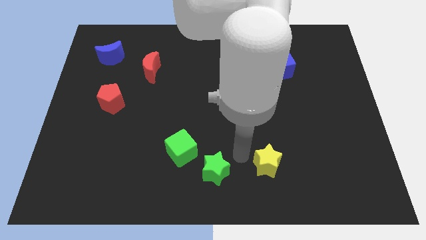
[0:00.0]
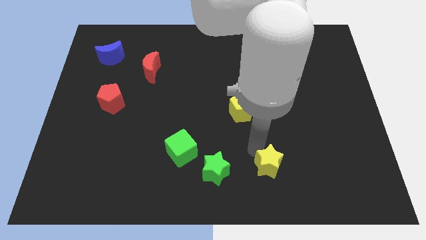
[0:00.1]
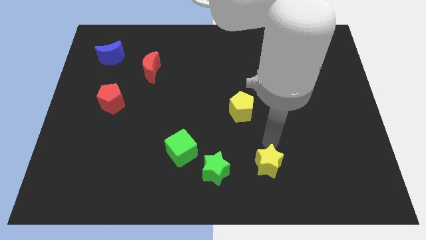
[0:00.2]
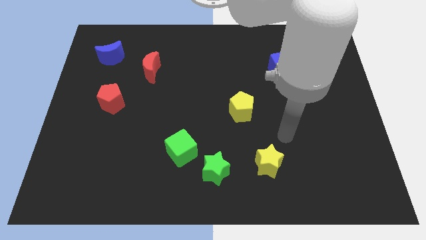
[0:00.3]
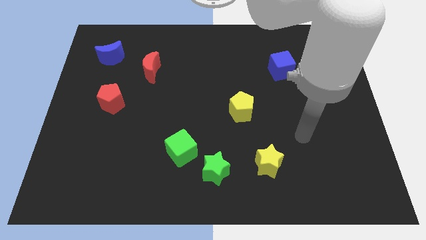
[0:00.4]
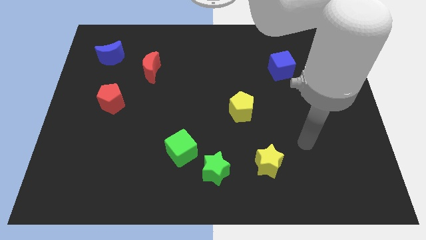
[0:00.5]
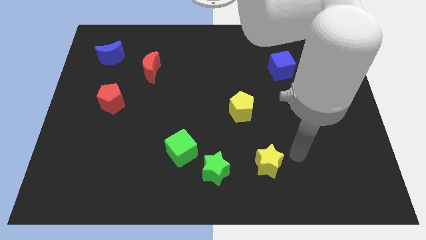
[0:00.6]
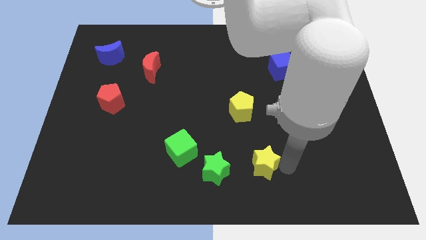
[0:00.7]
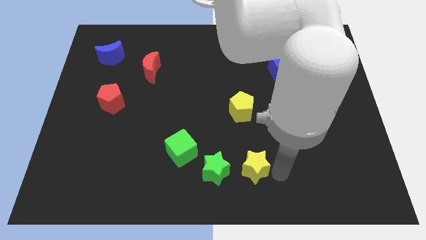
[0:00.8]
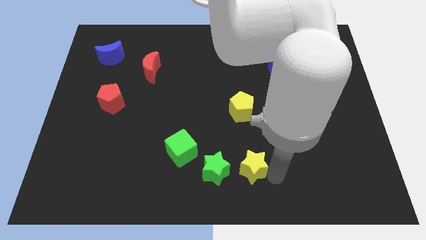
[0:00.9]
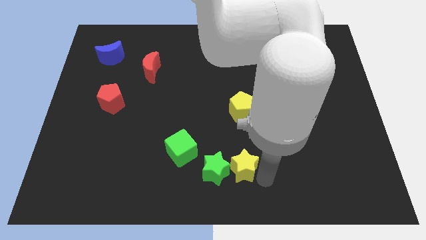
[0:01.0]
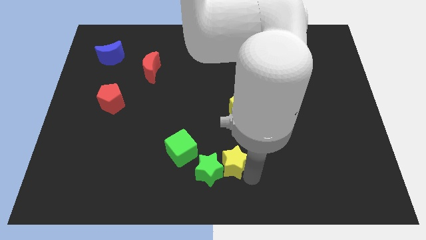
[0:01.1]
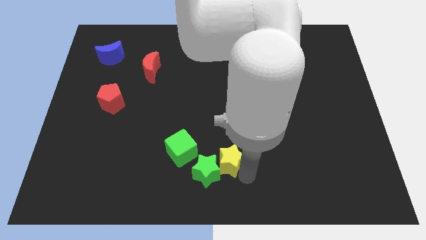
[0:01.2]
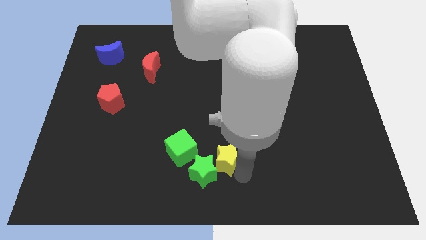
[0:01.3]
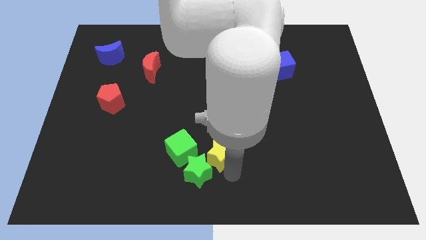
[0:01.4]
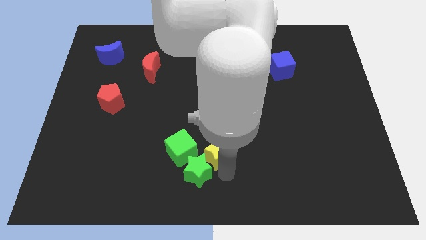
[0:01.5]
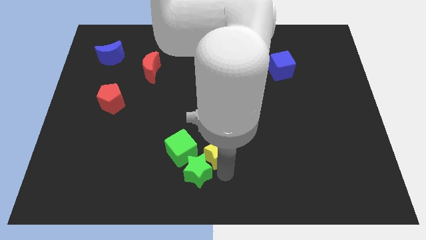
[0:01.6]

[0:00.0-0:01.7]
move the yellow star into the green star

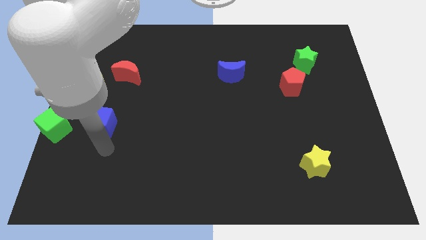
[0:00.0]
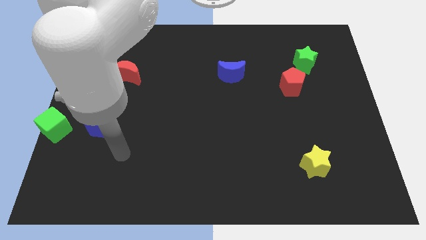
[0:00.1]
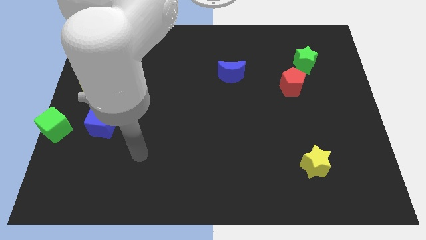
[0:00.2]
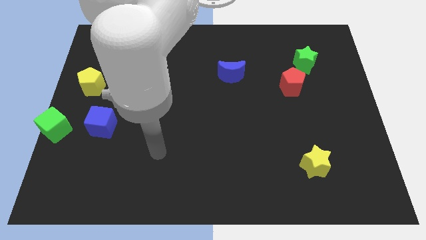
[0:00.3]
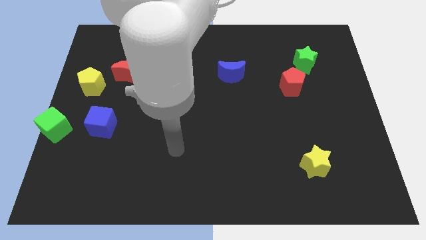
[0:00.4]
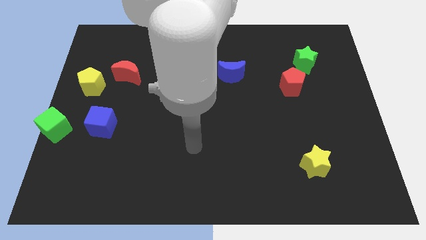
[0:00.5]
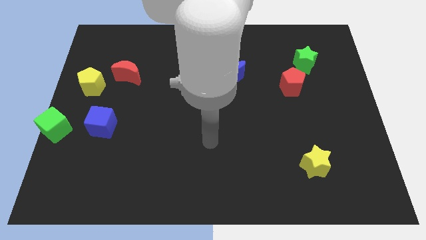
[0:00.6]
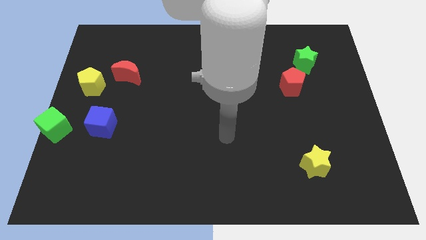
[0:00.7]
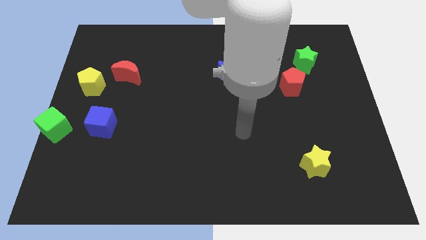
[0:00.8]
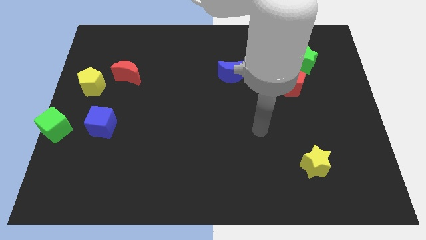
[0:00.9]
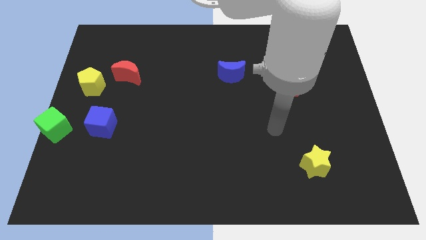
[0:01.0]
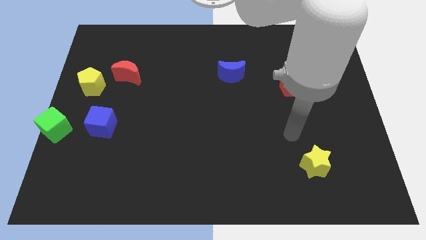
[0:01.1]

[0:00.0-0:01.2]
place your arm to the top left side of the yellow star

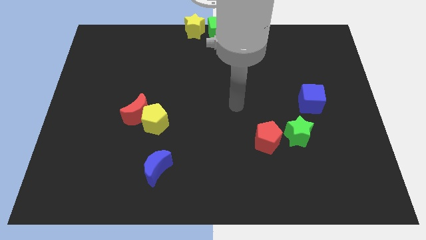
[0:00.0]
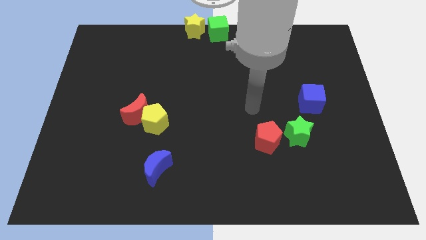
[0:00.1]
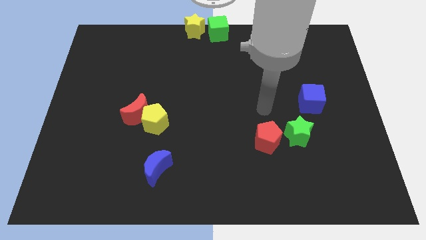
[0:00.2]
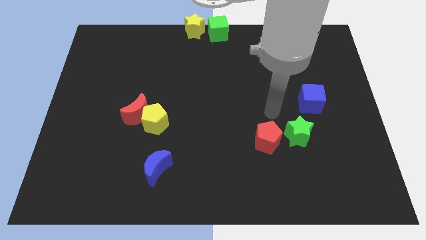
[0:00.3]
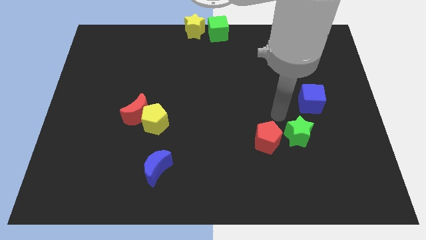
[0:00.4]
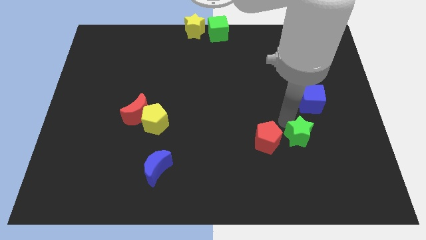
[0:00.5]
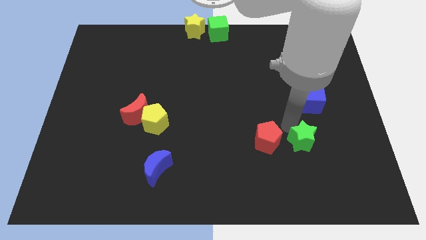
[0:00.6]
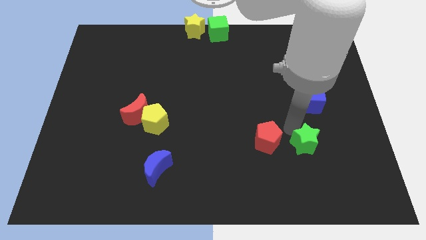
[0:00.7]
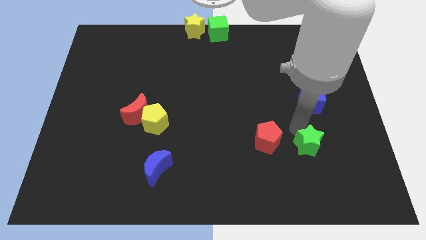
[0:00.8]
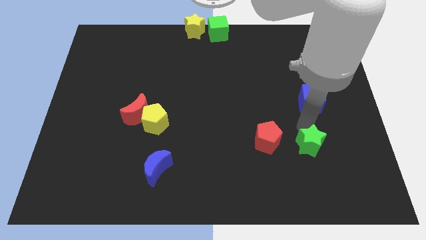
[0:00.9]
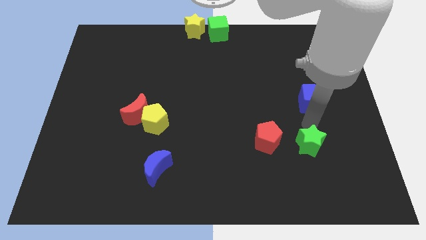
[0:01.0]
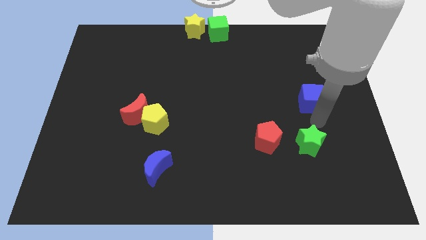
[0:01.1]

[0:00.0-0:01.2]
slightly push the green star to the bottom of the board

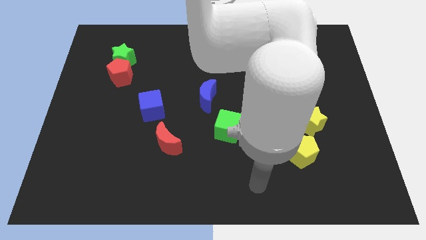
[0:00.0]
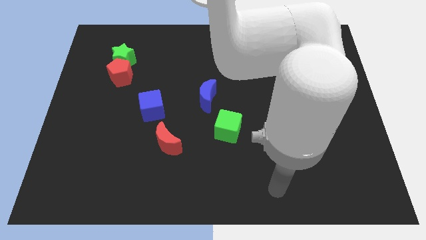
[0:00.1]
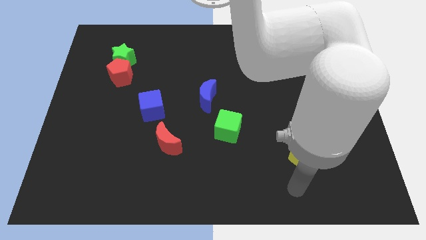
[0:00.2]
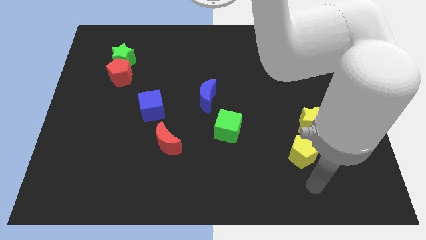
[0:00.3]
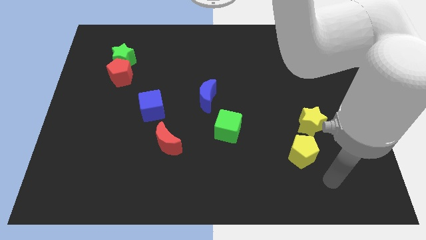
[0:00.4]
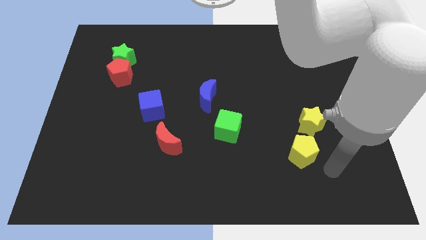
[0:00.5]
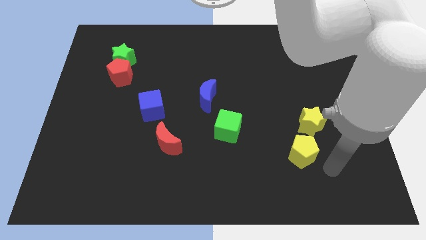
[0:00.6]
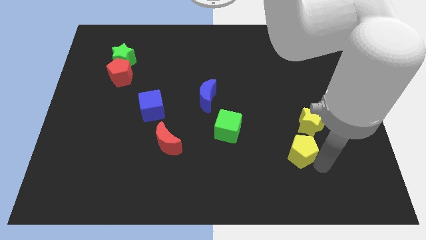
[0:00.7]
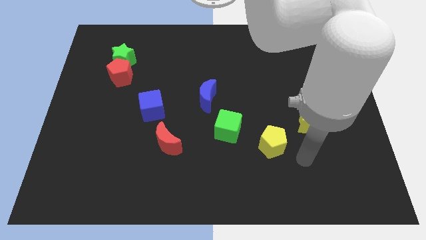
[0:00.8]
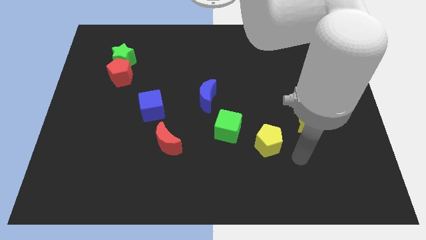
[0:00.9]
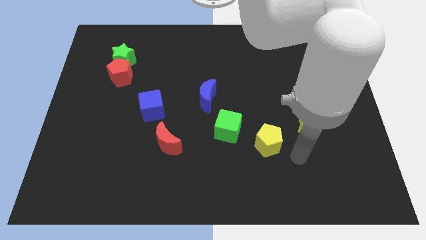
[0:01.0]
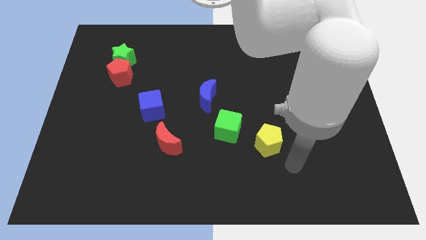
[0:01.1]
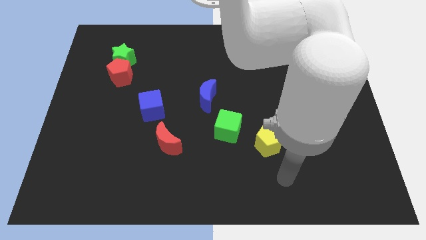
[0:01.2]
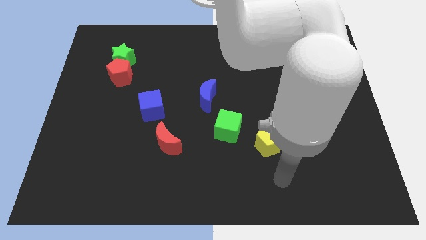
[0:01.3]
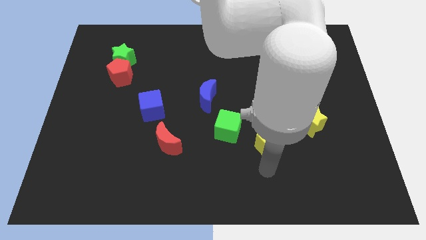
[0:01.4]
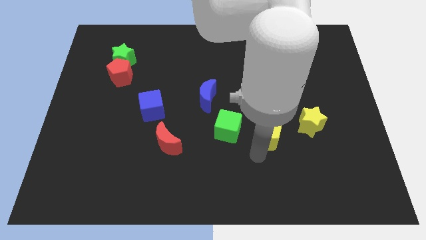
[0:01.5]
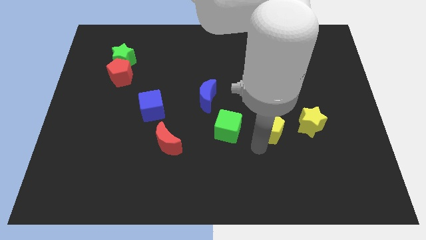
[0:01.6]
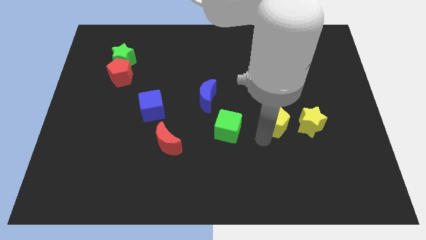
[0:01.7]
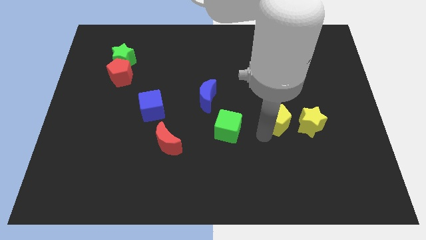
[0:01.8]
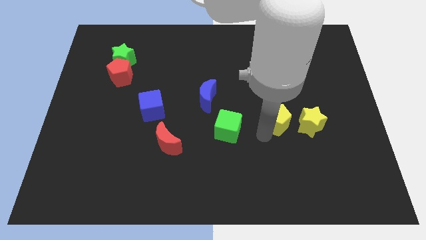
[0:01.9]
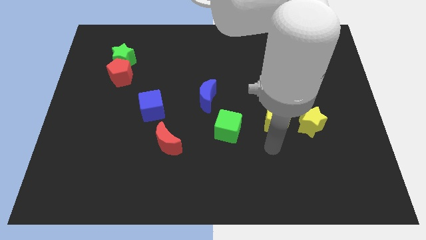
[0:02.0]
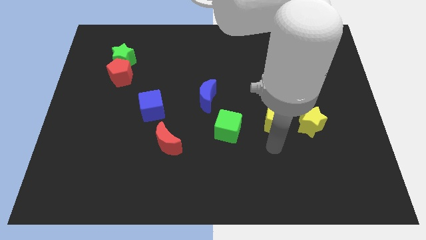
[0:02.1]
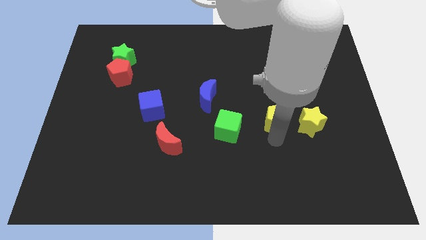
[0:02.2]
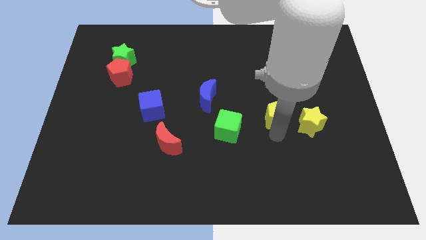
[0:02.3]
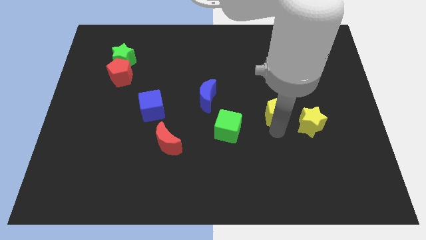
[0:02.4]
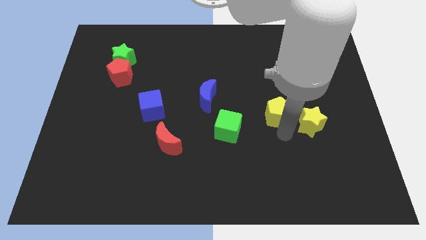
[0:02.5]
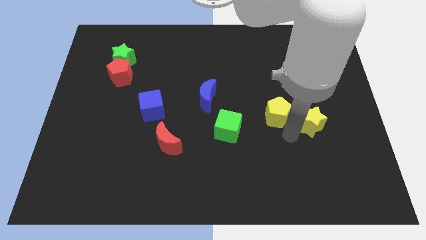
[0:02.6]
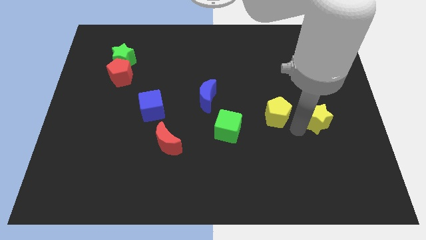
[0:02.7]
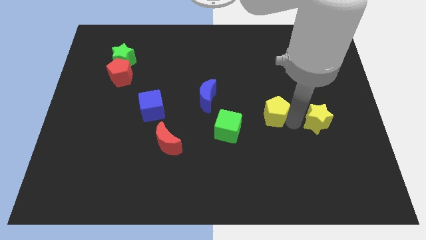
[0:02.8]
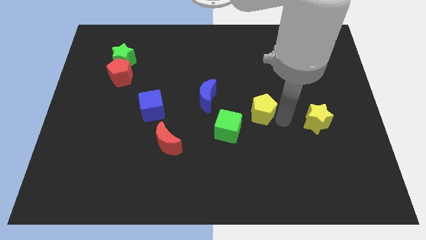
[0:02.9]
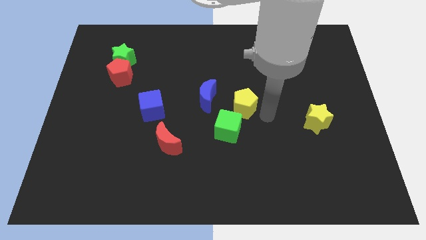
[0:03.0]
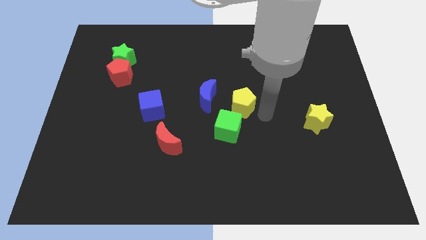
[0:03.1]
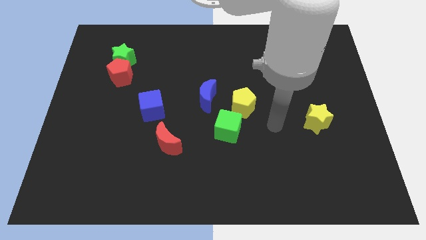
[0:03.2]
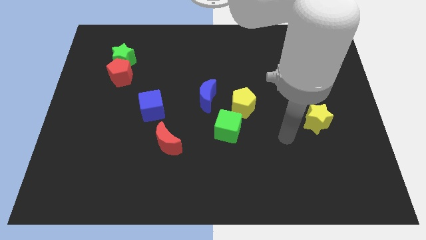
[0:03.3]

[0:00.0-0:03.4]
move the yellow pentagon parallel right to the blue crescent

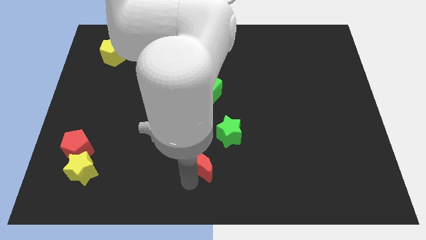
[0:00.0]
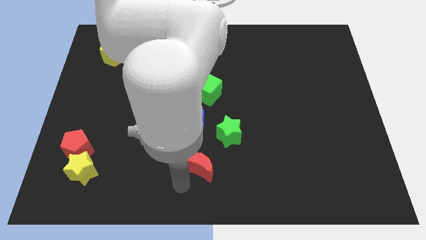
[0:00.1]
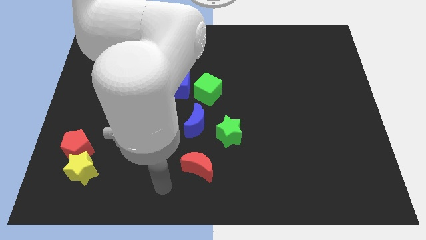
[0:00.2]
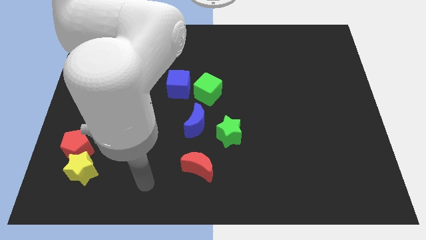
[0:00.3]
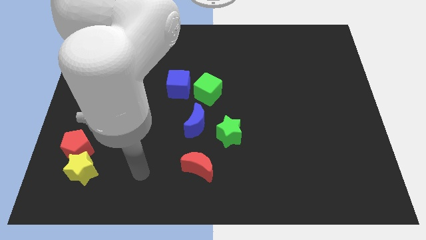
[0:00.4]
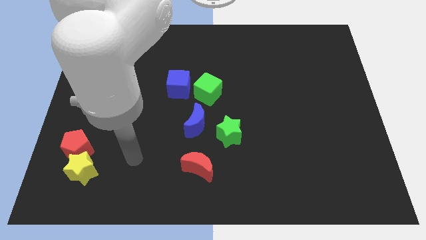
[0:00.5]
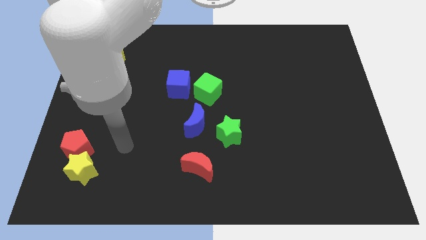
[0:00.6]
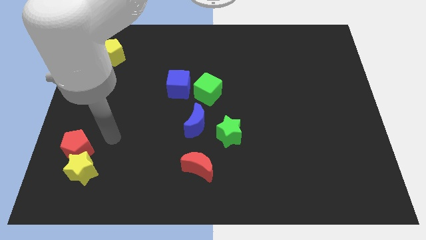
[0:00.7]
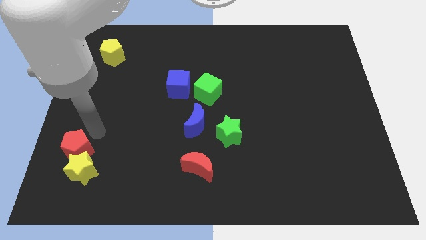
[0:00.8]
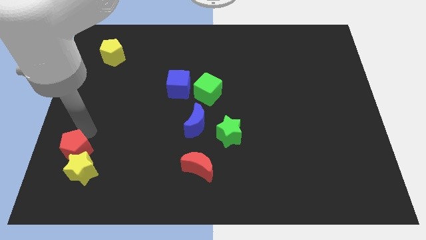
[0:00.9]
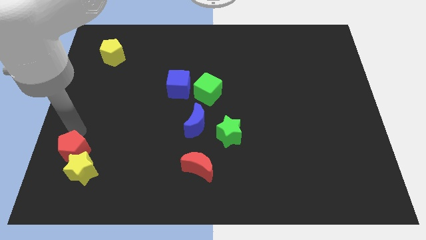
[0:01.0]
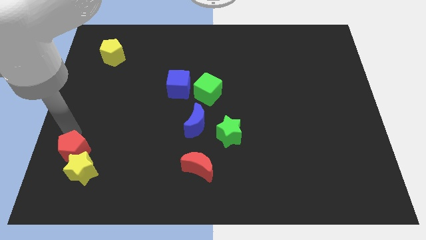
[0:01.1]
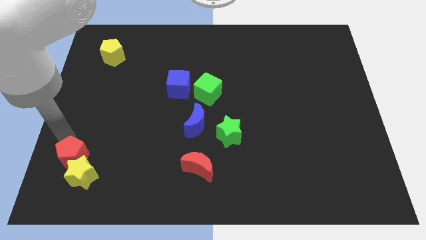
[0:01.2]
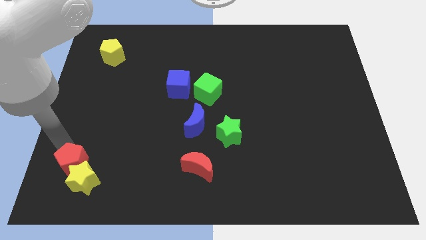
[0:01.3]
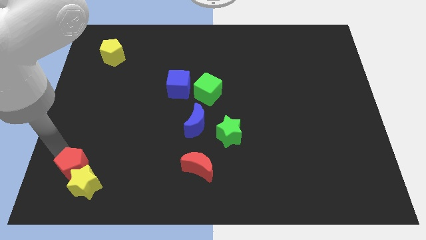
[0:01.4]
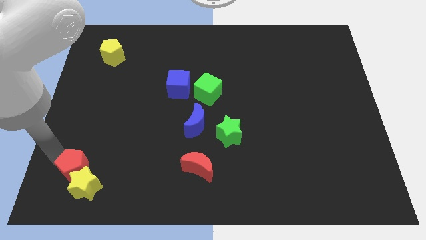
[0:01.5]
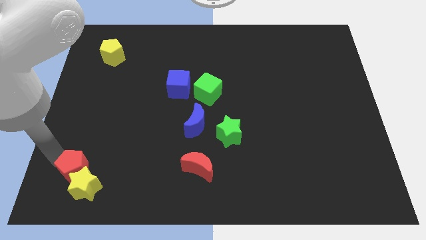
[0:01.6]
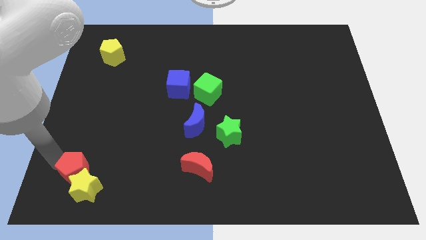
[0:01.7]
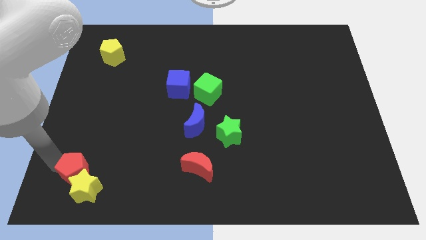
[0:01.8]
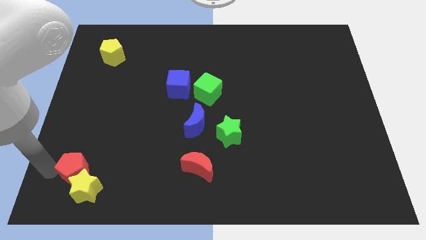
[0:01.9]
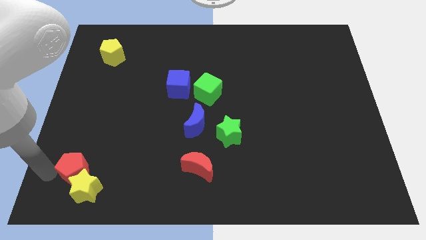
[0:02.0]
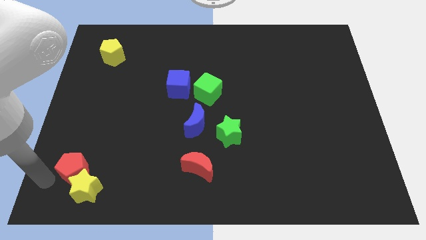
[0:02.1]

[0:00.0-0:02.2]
slide the red crescent and yellow star to the left bottom corner
